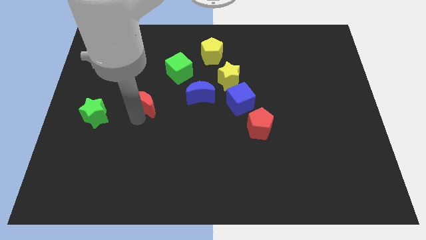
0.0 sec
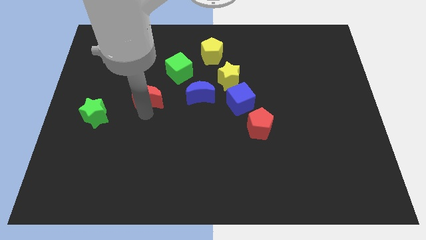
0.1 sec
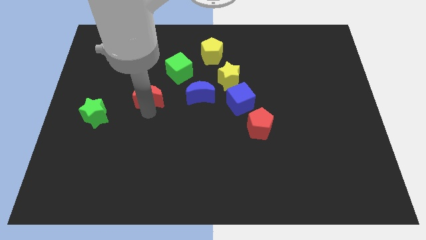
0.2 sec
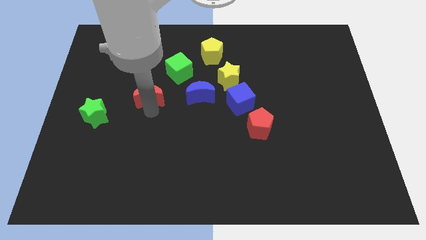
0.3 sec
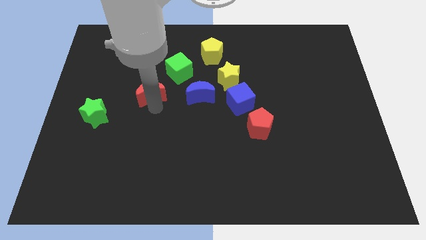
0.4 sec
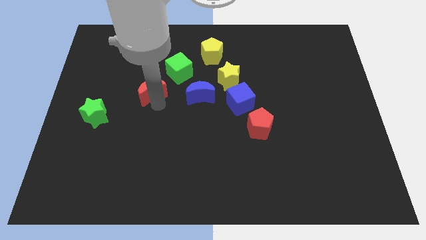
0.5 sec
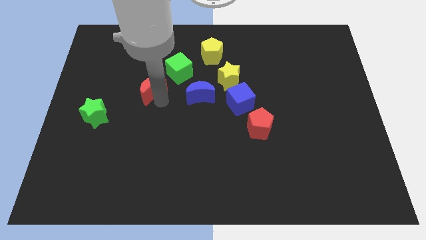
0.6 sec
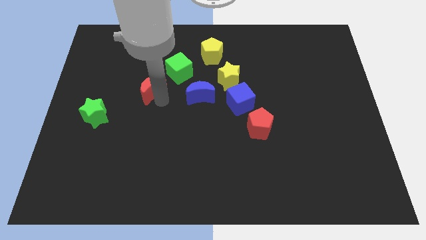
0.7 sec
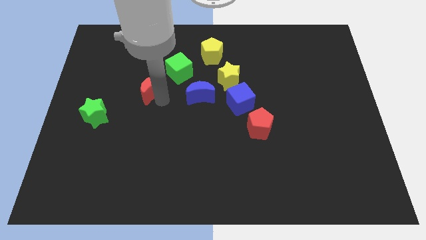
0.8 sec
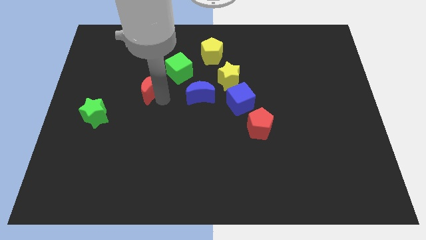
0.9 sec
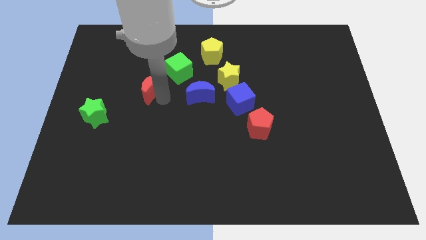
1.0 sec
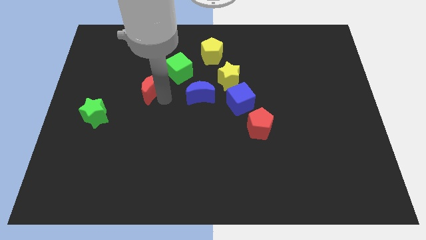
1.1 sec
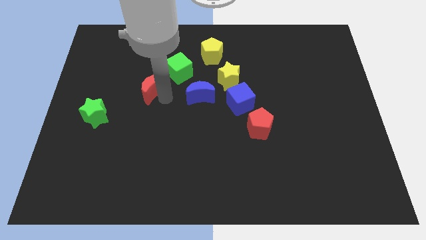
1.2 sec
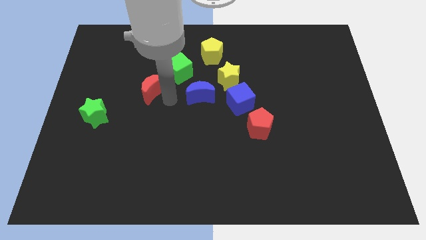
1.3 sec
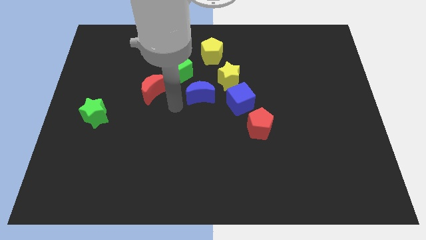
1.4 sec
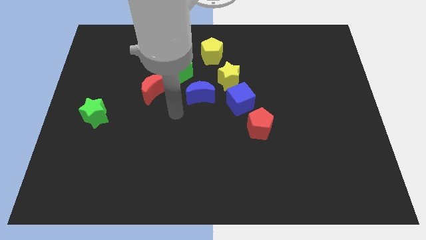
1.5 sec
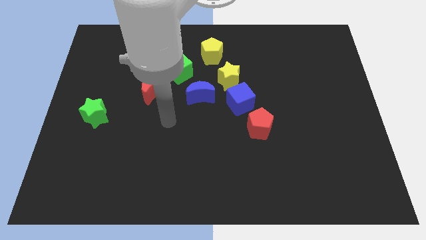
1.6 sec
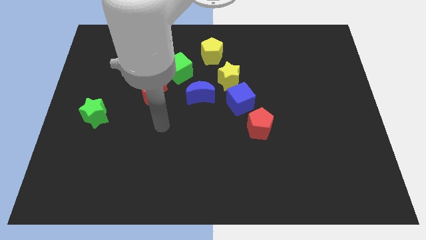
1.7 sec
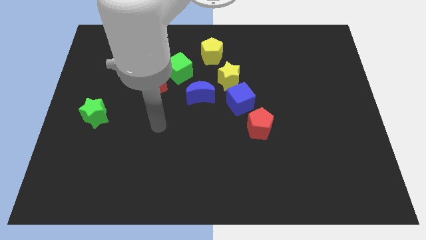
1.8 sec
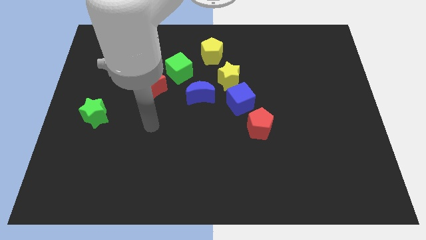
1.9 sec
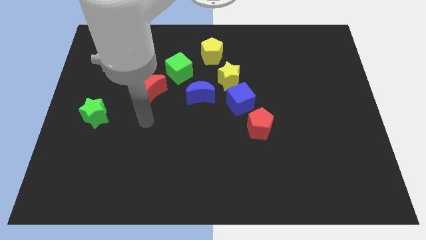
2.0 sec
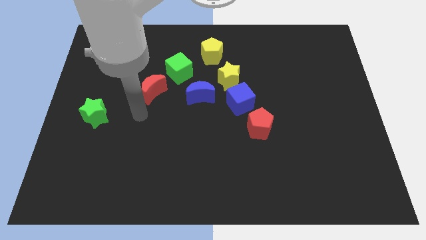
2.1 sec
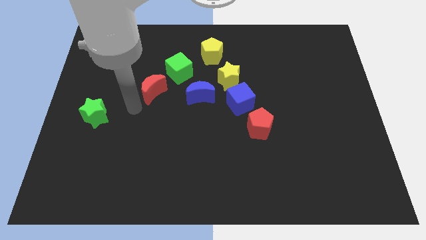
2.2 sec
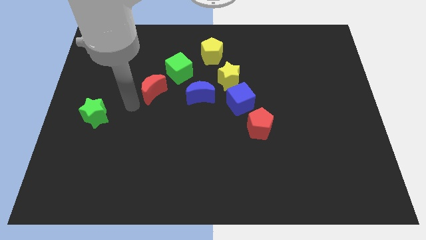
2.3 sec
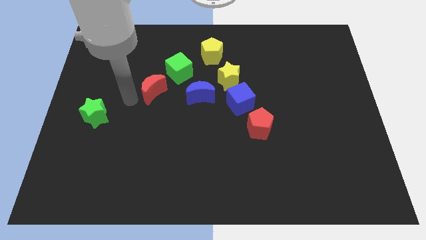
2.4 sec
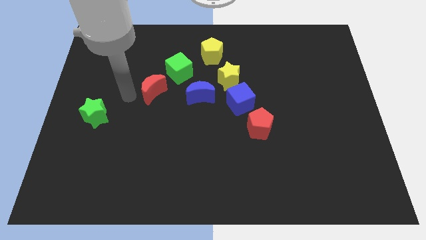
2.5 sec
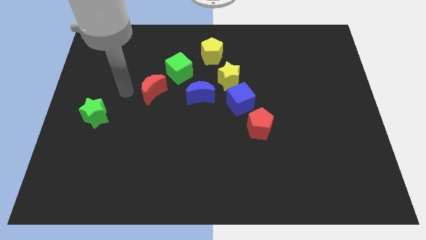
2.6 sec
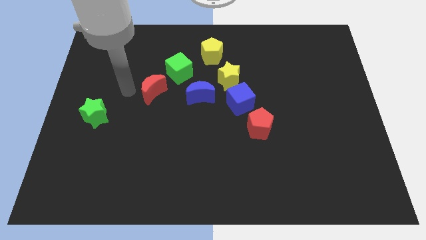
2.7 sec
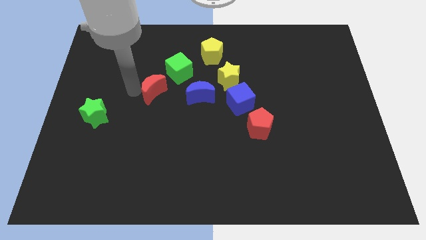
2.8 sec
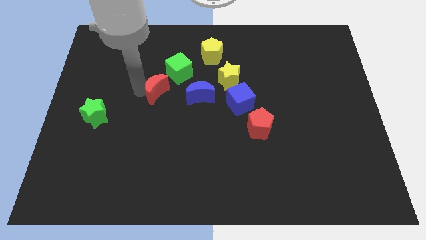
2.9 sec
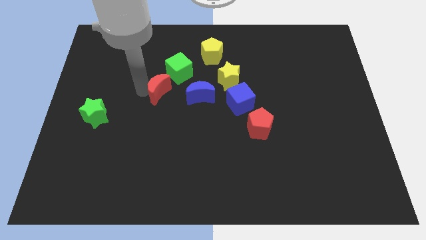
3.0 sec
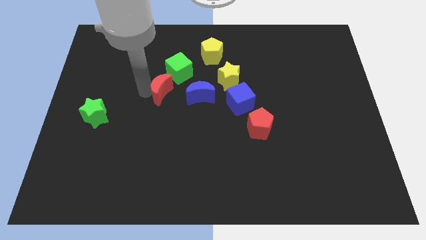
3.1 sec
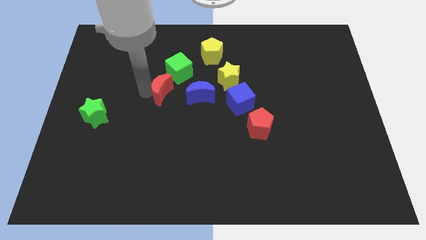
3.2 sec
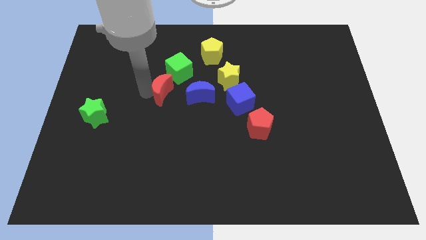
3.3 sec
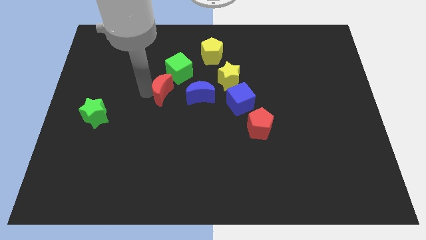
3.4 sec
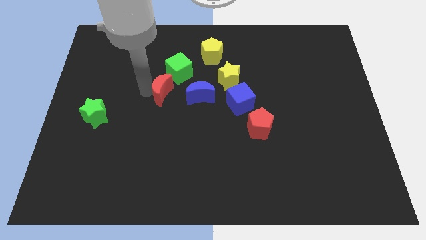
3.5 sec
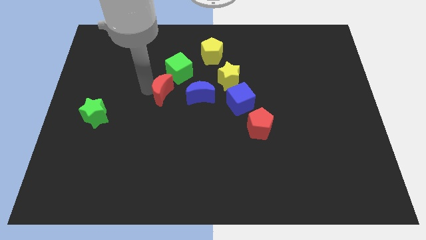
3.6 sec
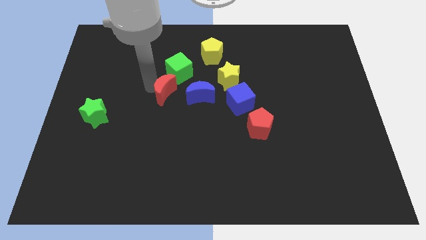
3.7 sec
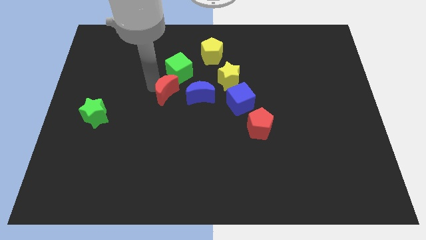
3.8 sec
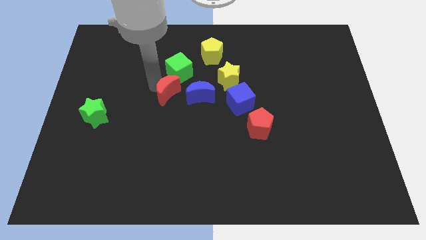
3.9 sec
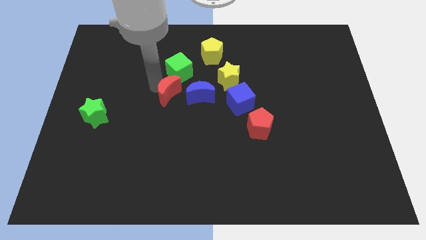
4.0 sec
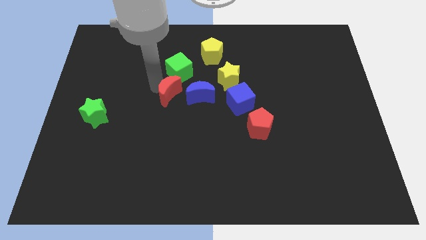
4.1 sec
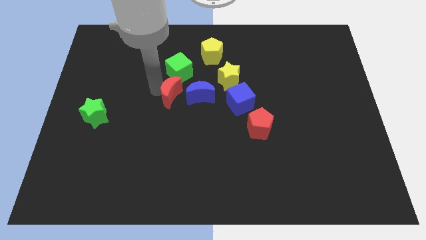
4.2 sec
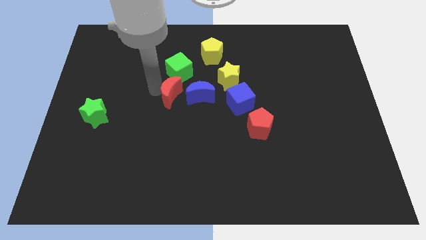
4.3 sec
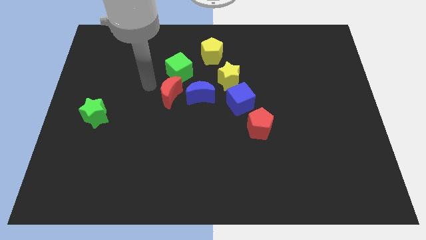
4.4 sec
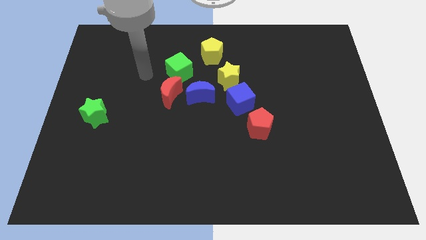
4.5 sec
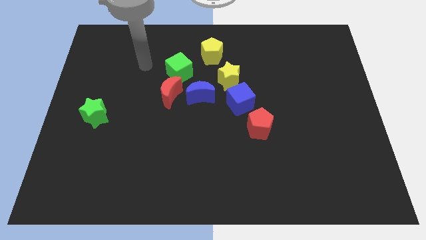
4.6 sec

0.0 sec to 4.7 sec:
place red moon to the left of blue moon

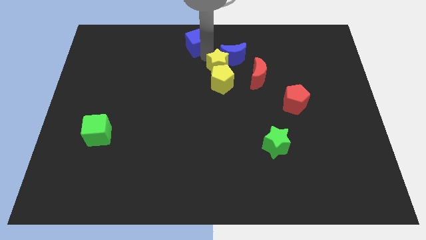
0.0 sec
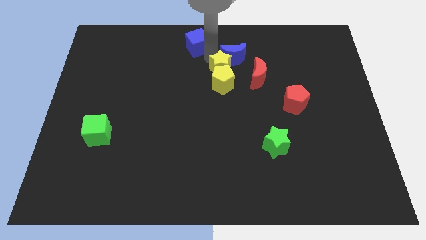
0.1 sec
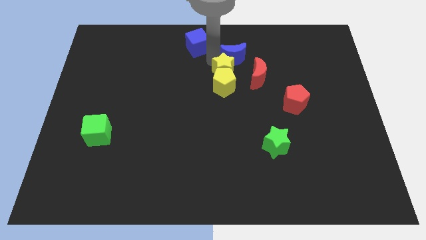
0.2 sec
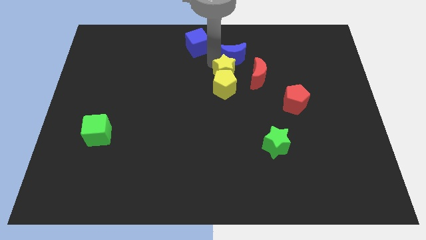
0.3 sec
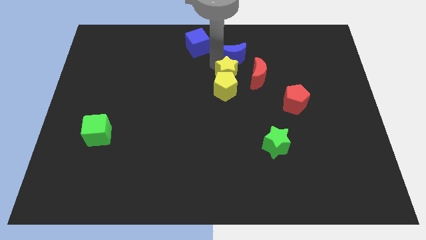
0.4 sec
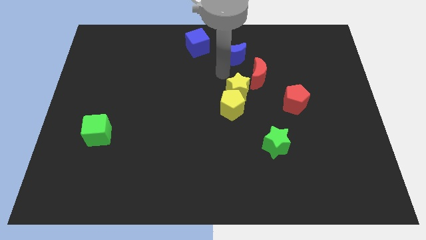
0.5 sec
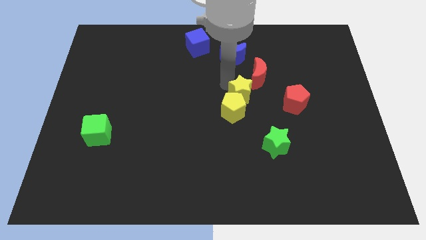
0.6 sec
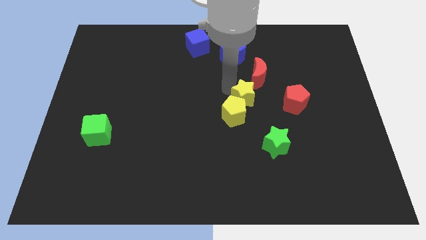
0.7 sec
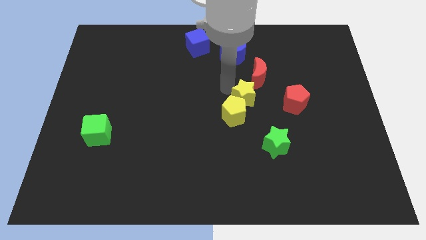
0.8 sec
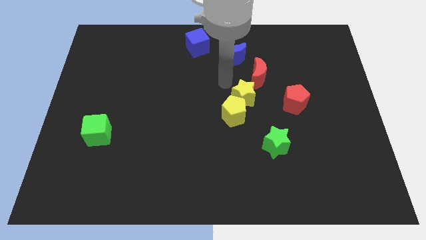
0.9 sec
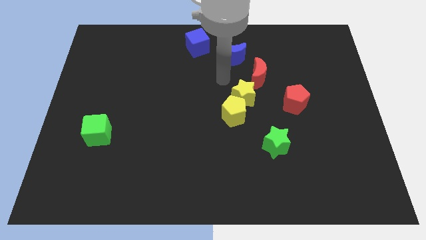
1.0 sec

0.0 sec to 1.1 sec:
push the group of yellow blocks away from the blue moon

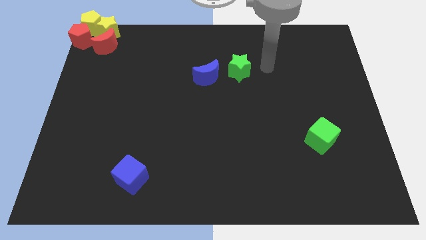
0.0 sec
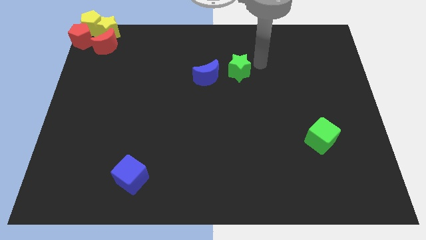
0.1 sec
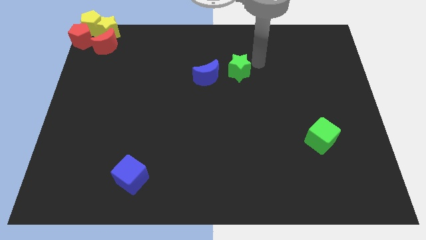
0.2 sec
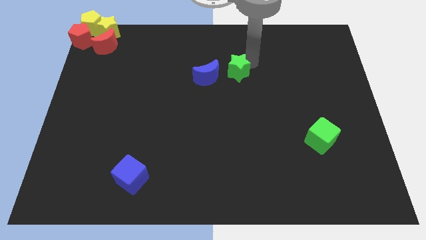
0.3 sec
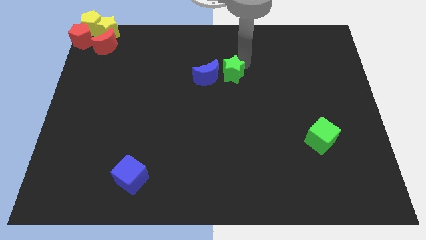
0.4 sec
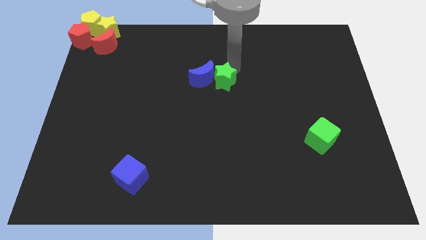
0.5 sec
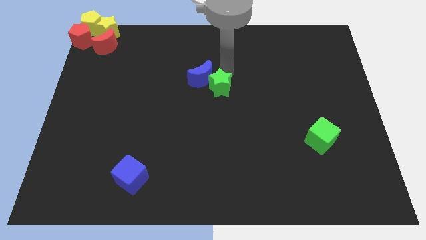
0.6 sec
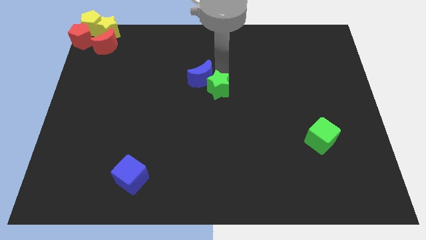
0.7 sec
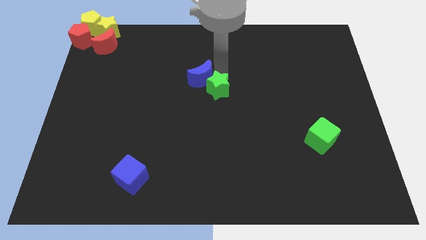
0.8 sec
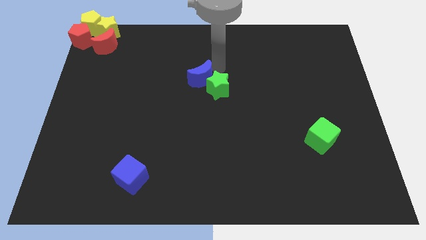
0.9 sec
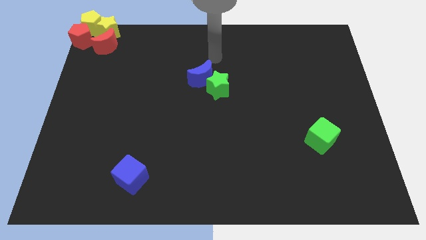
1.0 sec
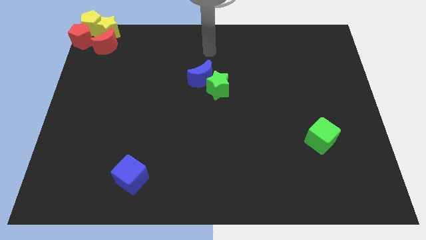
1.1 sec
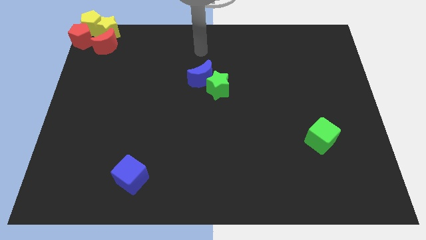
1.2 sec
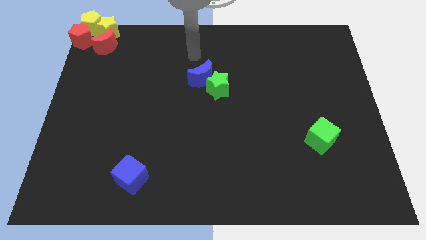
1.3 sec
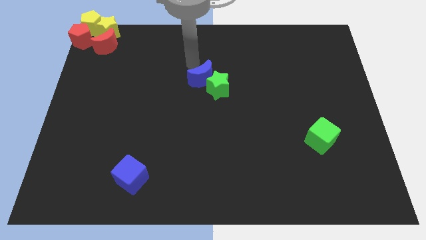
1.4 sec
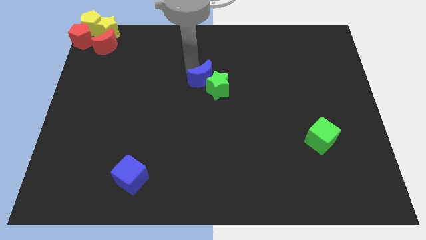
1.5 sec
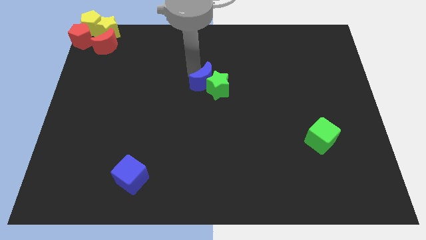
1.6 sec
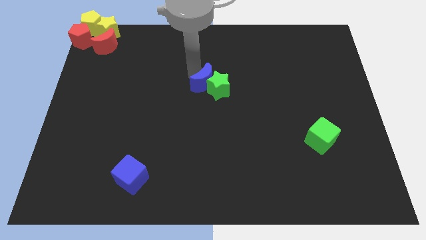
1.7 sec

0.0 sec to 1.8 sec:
place green star below the blue crescent

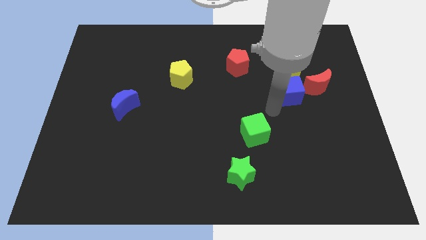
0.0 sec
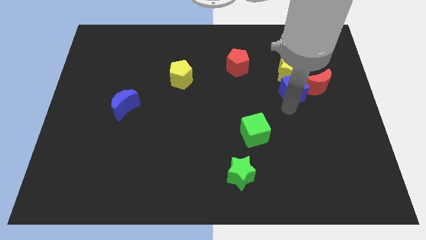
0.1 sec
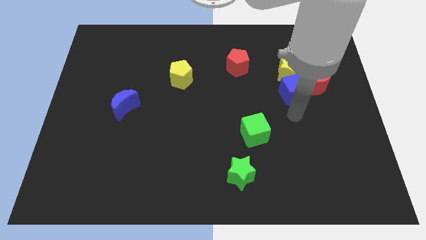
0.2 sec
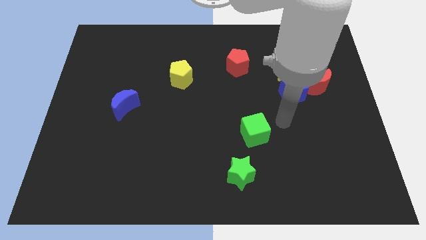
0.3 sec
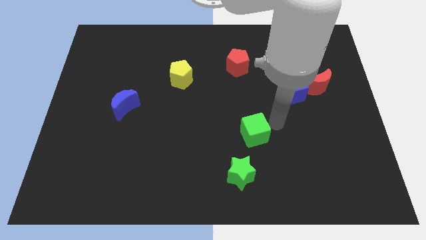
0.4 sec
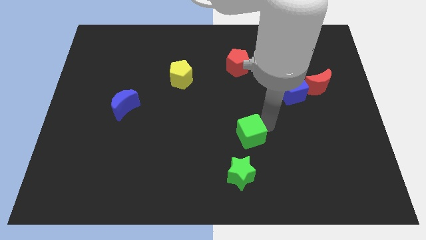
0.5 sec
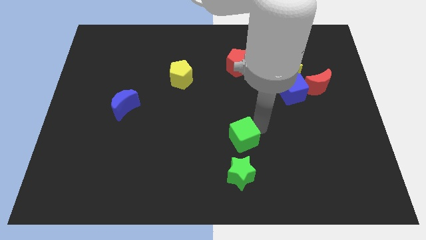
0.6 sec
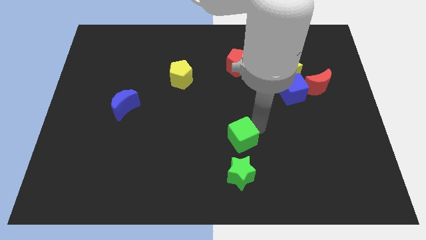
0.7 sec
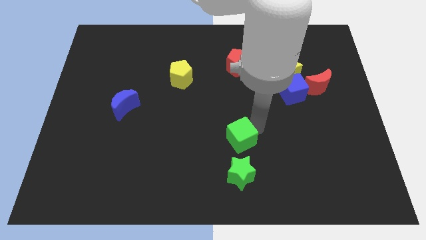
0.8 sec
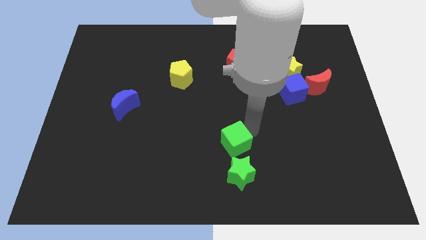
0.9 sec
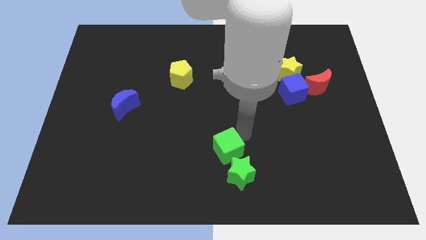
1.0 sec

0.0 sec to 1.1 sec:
move the green cube towards green star

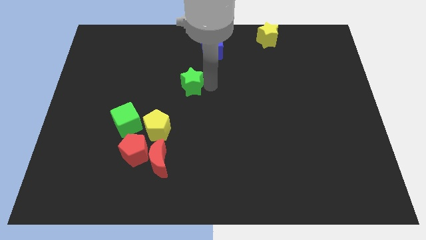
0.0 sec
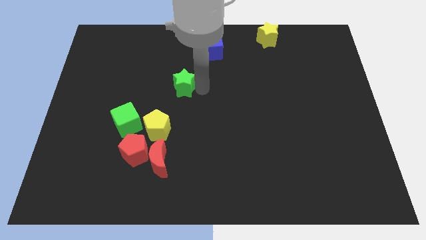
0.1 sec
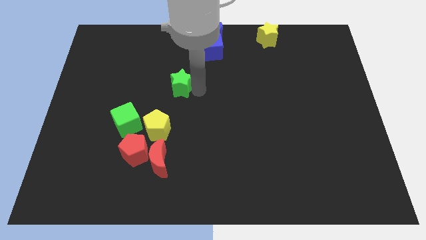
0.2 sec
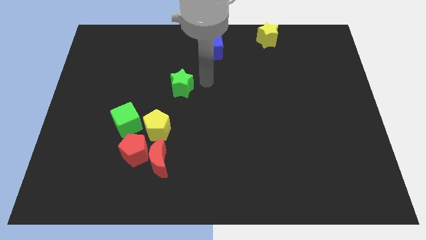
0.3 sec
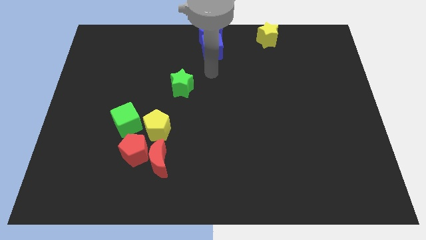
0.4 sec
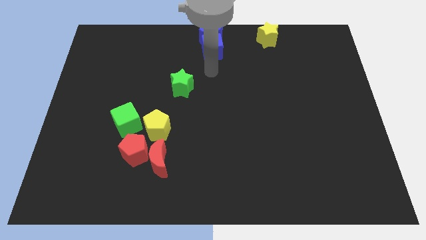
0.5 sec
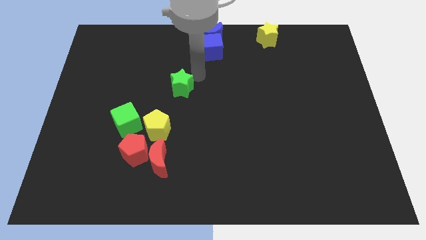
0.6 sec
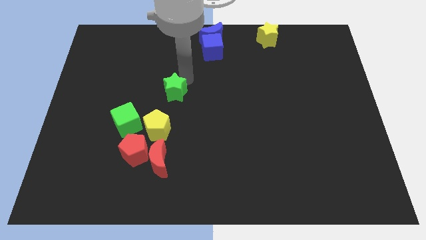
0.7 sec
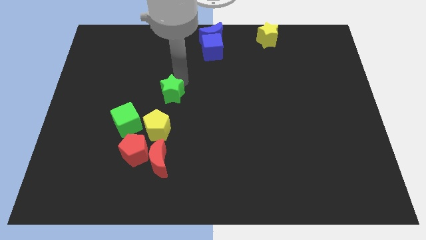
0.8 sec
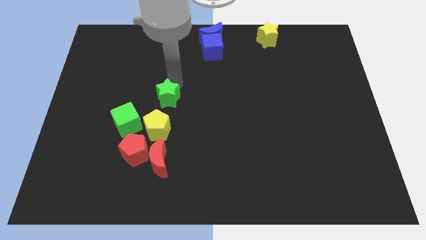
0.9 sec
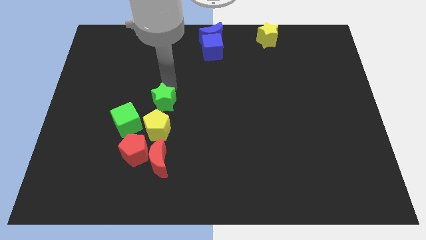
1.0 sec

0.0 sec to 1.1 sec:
move green star on top of yellow pentagon
